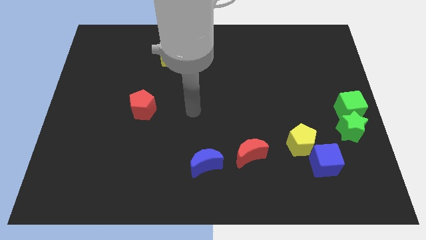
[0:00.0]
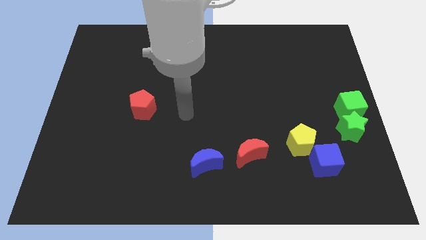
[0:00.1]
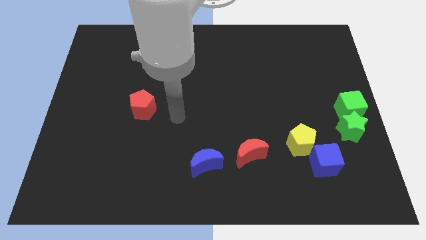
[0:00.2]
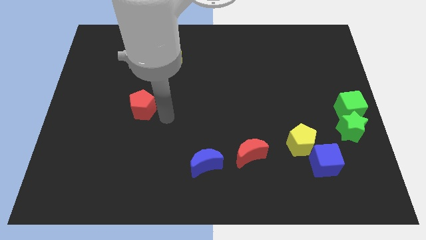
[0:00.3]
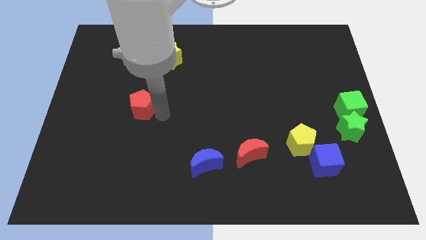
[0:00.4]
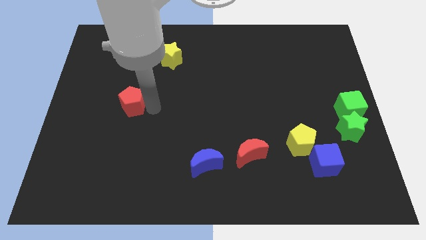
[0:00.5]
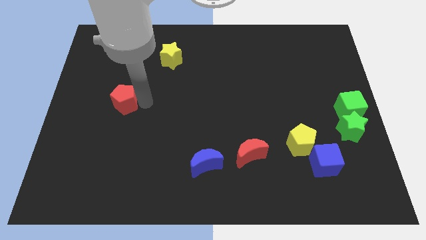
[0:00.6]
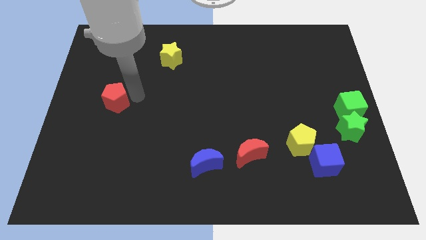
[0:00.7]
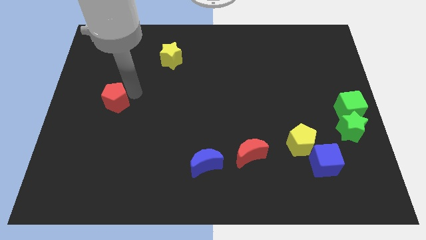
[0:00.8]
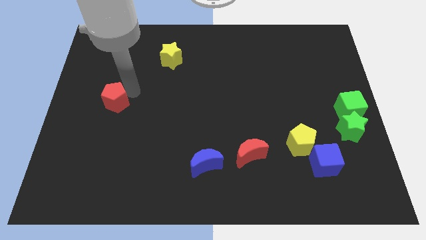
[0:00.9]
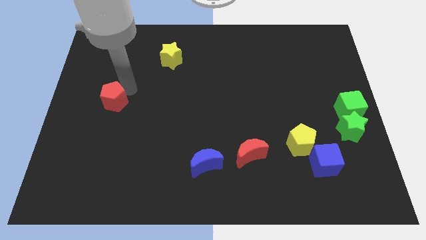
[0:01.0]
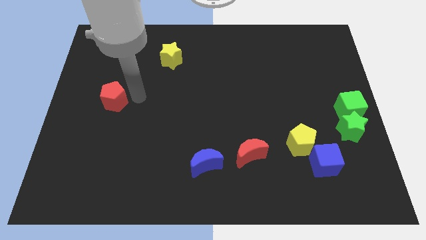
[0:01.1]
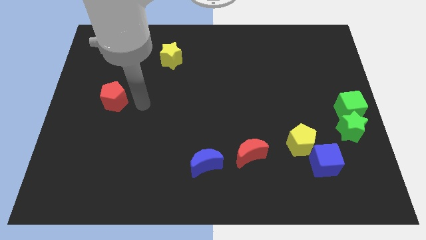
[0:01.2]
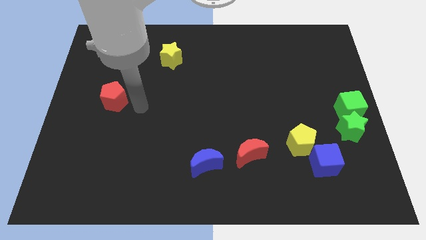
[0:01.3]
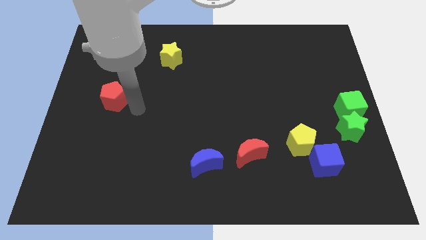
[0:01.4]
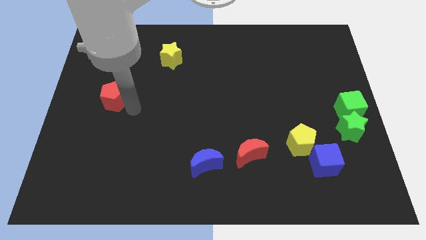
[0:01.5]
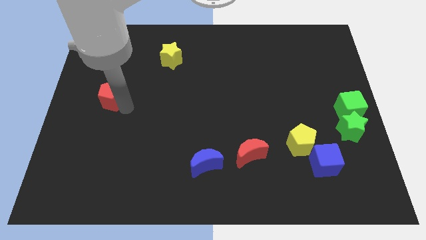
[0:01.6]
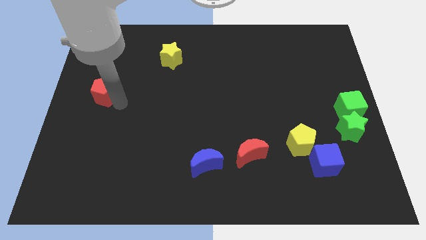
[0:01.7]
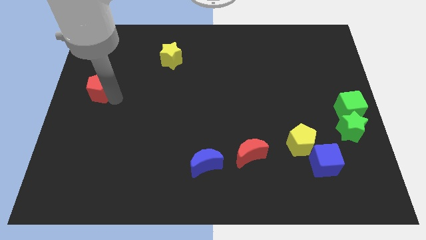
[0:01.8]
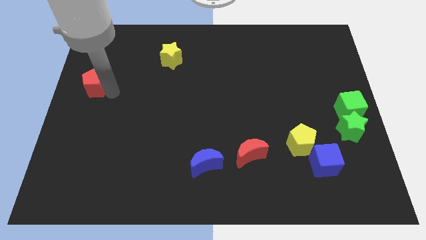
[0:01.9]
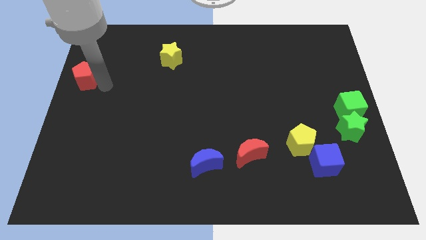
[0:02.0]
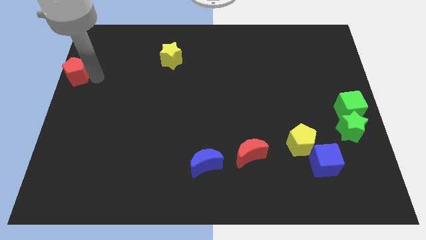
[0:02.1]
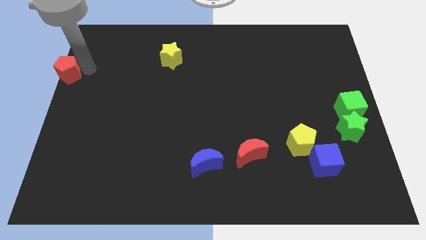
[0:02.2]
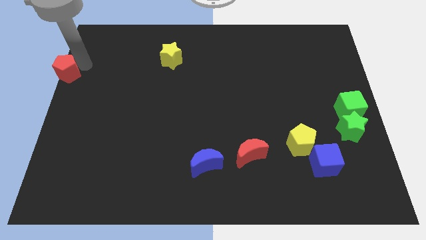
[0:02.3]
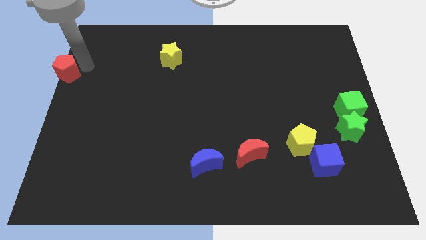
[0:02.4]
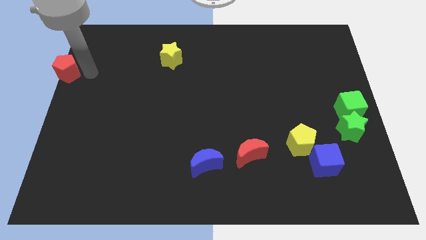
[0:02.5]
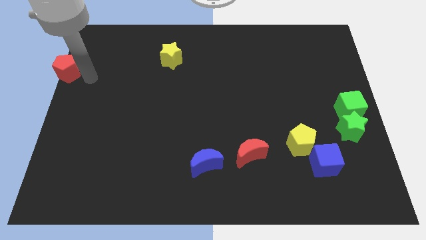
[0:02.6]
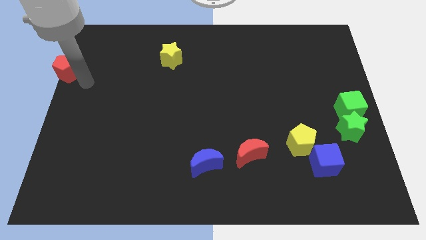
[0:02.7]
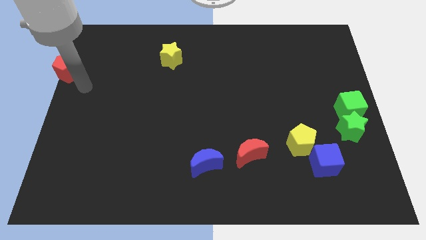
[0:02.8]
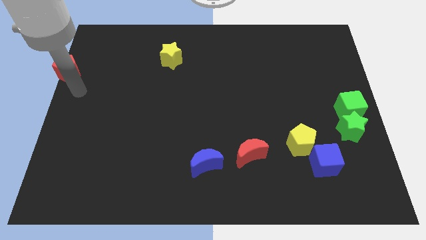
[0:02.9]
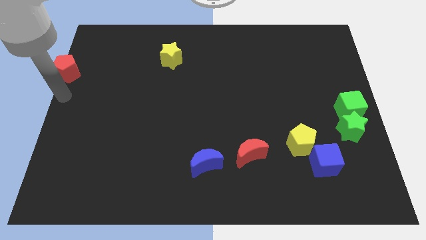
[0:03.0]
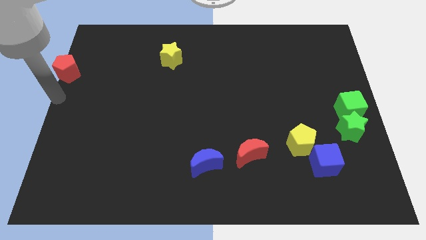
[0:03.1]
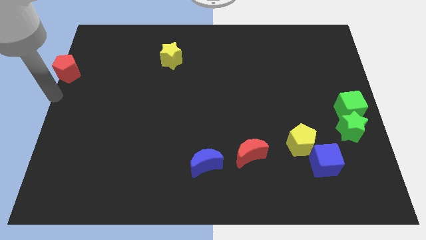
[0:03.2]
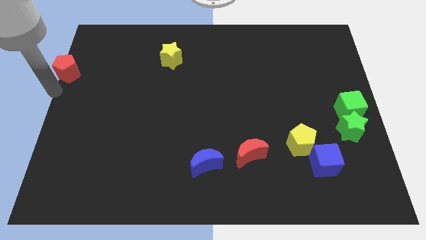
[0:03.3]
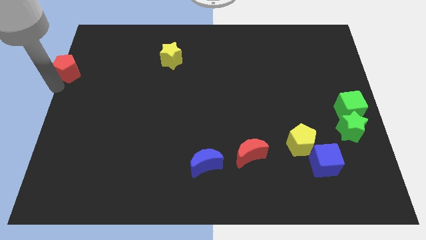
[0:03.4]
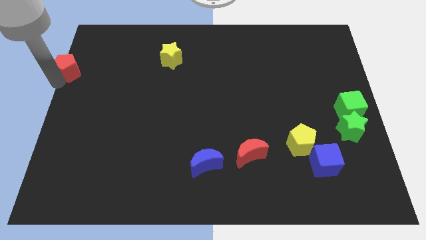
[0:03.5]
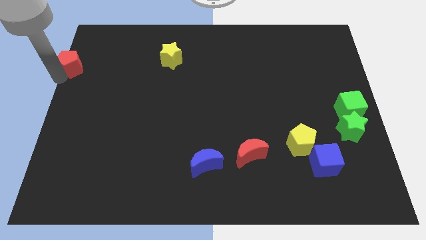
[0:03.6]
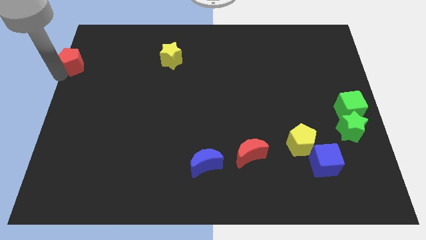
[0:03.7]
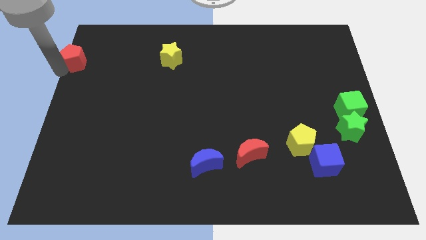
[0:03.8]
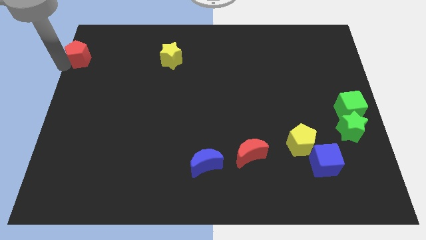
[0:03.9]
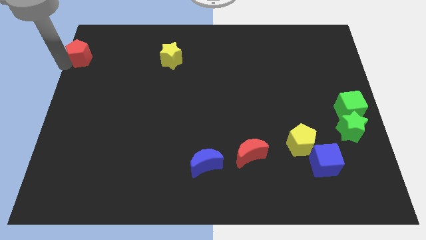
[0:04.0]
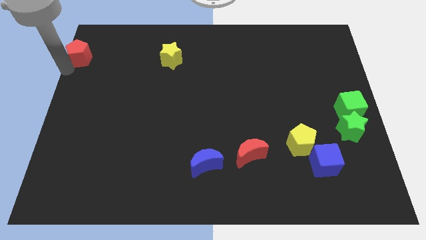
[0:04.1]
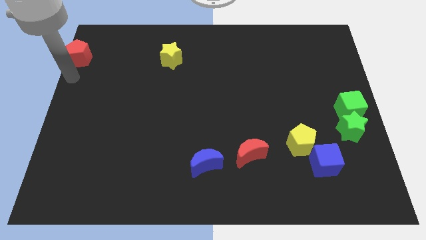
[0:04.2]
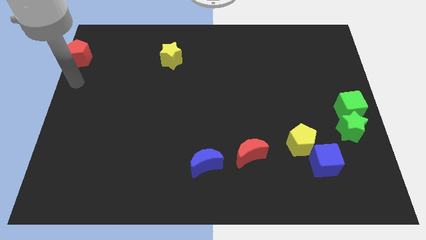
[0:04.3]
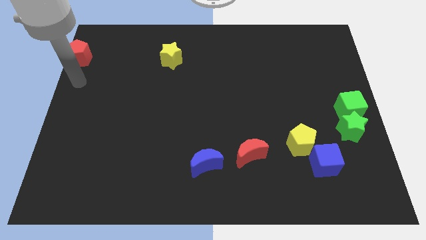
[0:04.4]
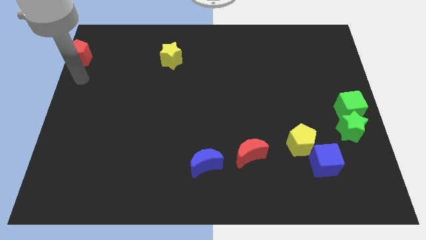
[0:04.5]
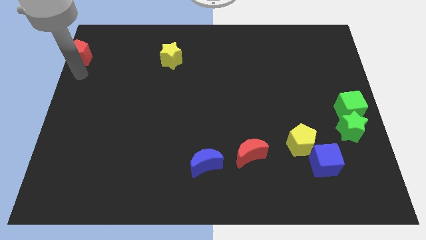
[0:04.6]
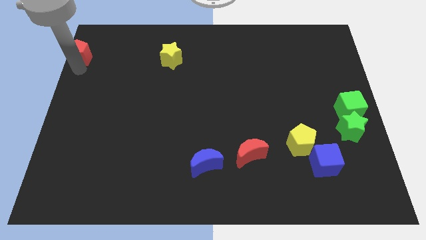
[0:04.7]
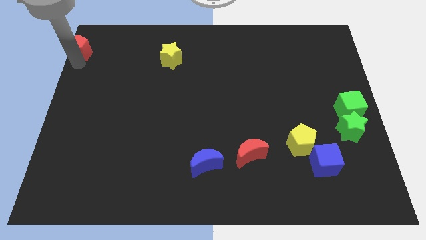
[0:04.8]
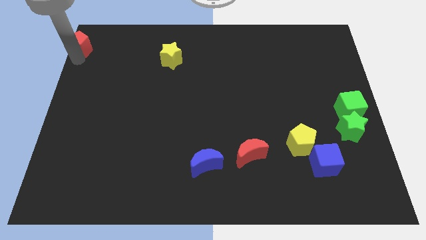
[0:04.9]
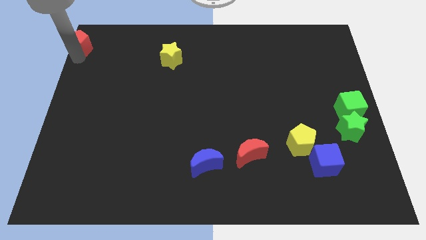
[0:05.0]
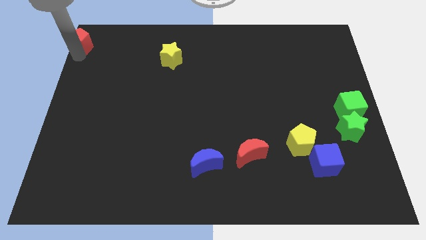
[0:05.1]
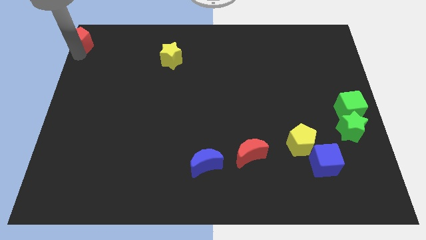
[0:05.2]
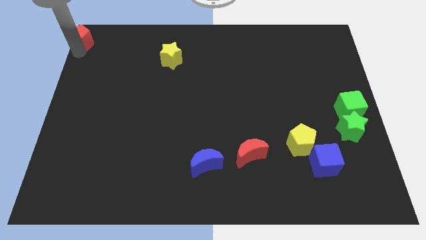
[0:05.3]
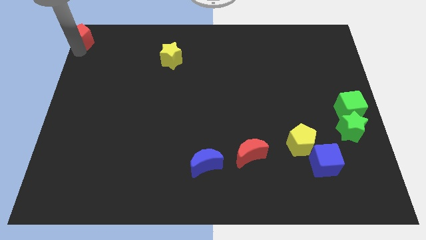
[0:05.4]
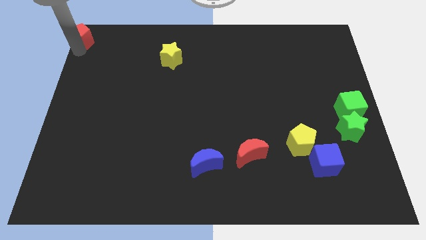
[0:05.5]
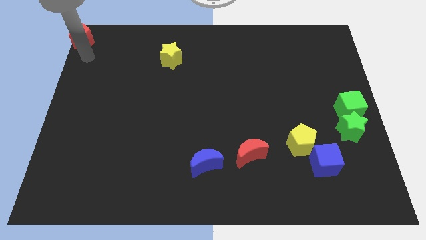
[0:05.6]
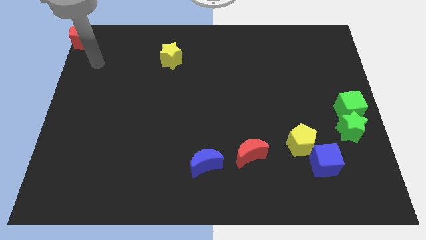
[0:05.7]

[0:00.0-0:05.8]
place red pentagon to the top left corner of the board

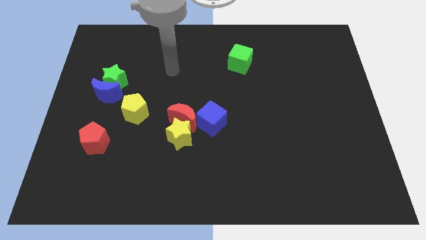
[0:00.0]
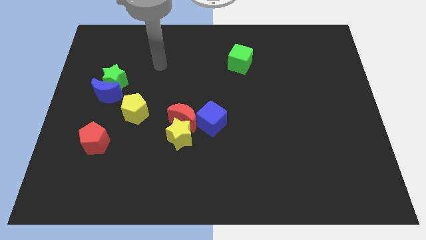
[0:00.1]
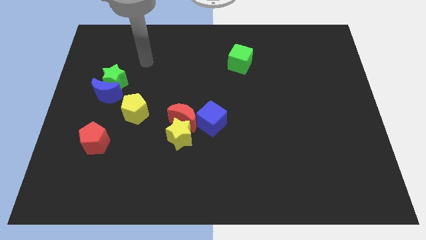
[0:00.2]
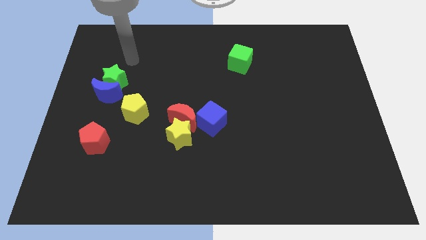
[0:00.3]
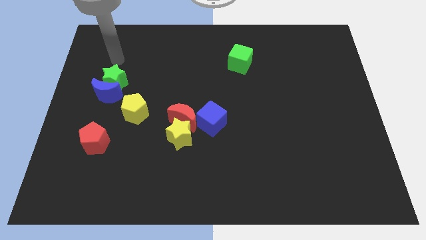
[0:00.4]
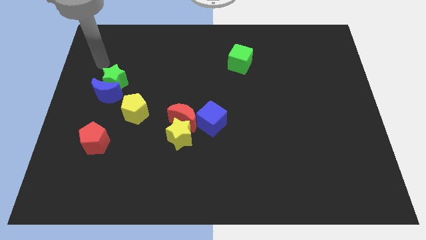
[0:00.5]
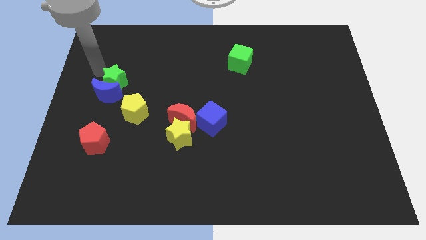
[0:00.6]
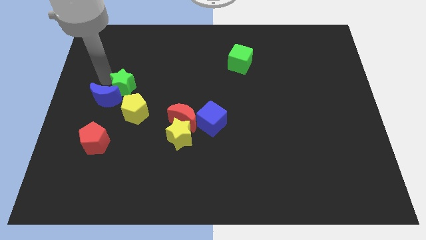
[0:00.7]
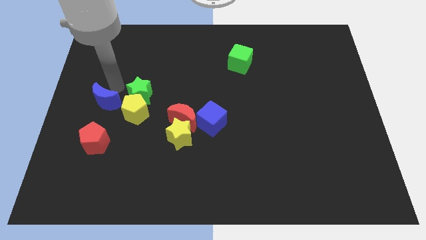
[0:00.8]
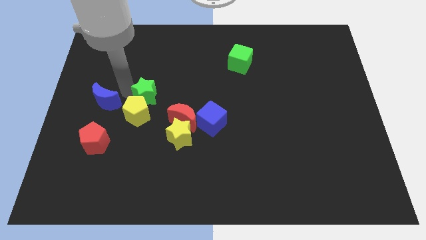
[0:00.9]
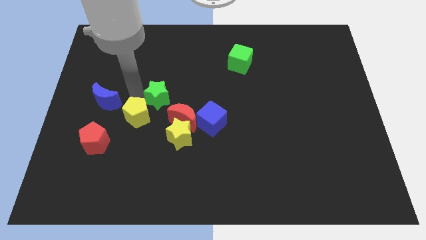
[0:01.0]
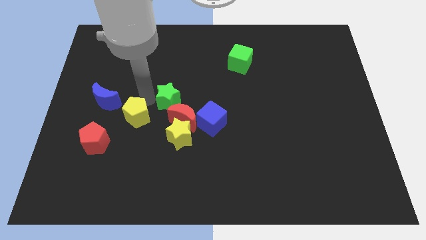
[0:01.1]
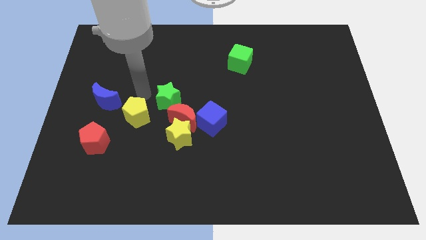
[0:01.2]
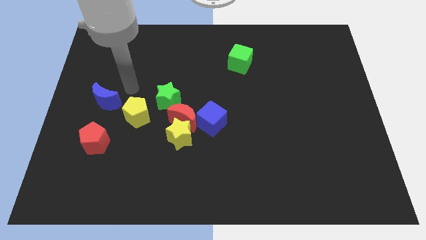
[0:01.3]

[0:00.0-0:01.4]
move the green star towards the center of the board

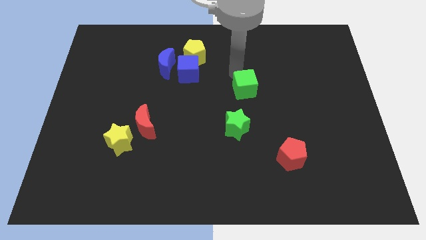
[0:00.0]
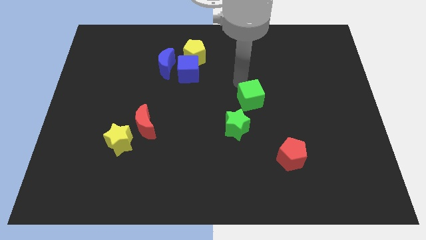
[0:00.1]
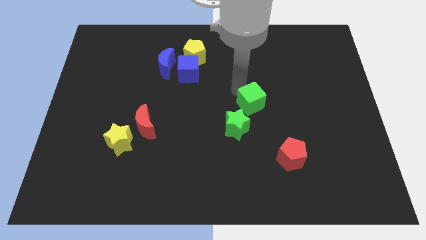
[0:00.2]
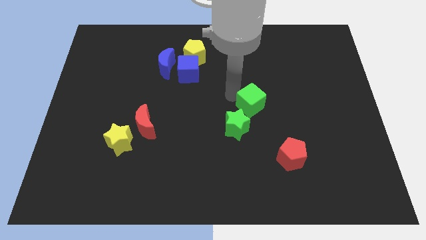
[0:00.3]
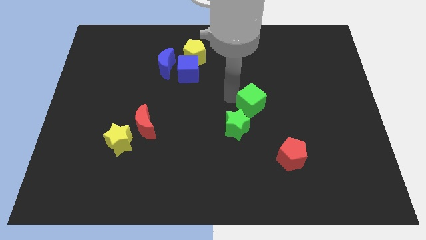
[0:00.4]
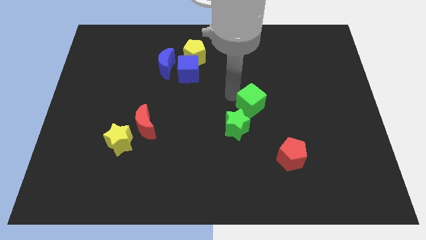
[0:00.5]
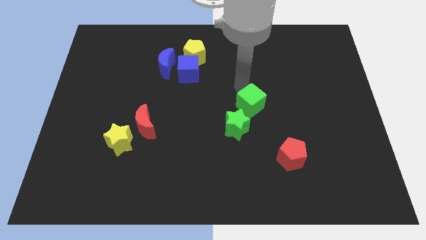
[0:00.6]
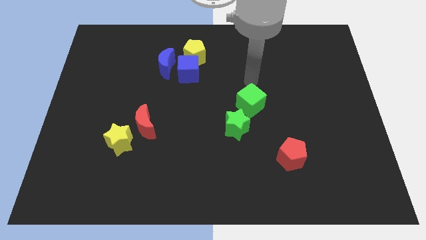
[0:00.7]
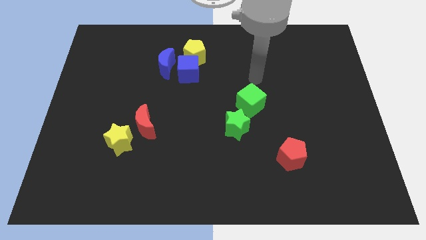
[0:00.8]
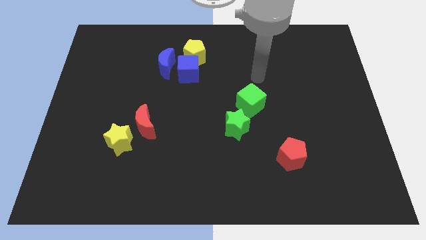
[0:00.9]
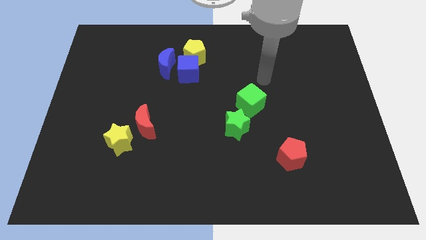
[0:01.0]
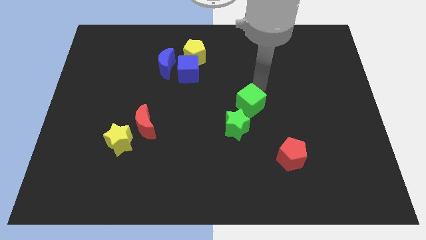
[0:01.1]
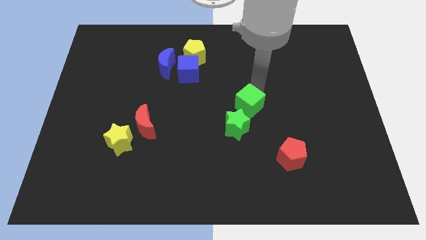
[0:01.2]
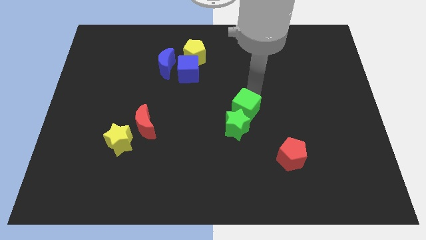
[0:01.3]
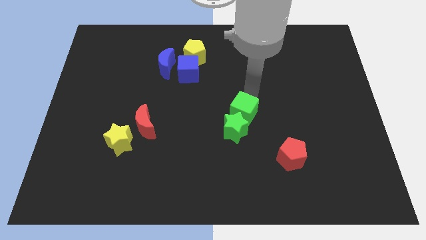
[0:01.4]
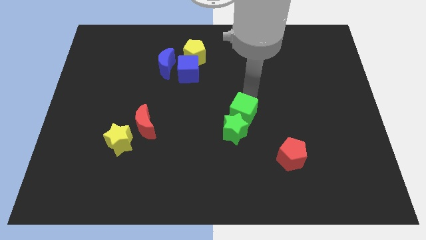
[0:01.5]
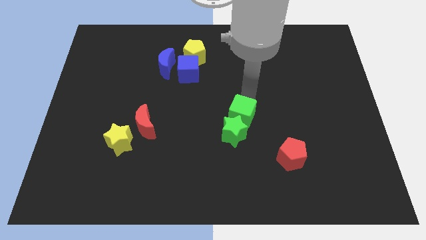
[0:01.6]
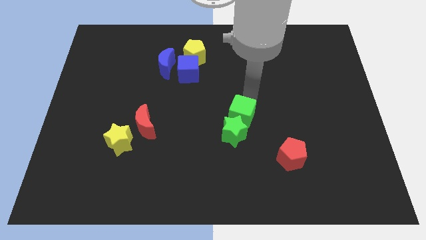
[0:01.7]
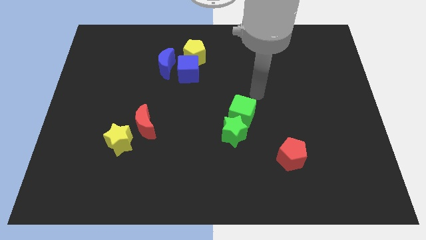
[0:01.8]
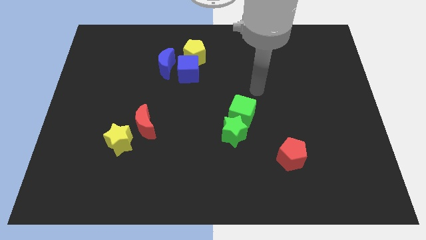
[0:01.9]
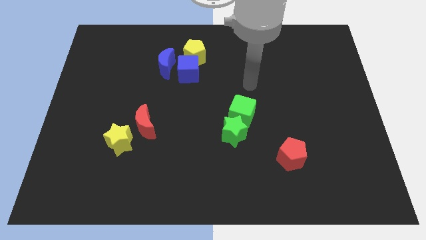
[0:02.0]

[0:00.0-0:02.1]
slide green cube into green star
